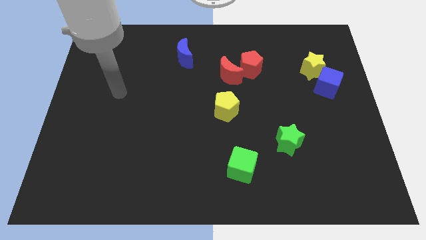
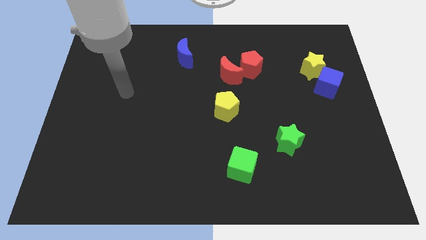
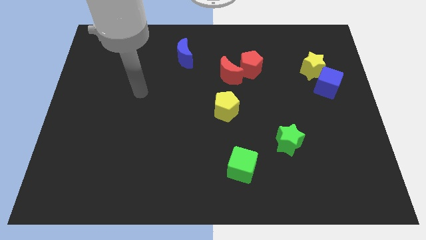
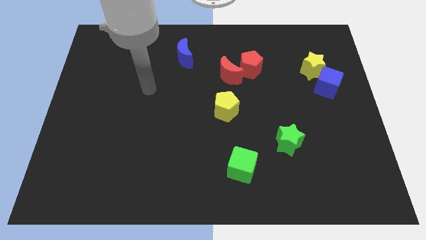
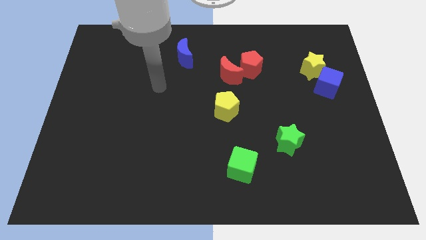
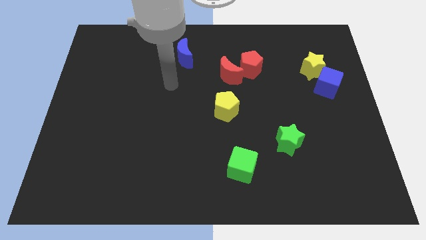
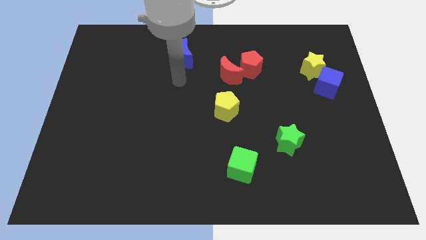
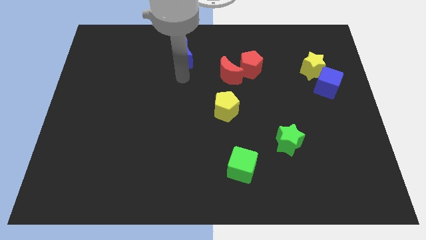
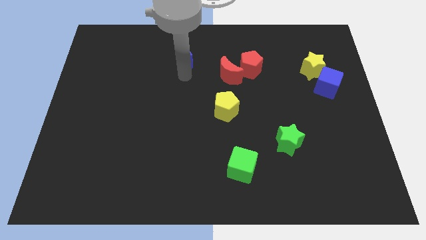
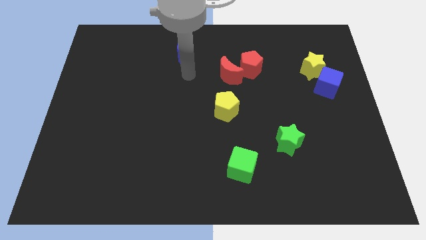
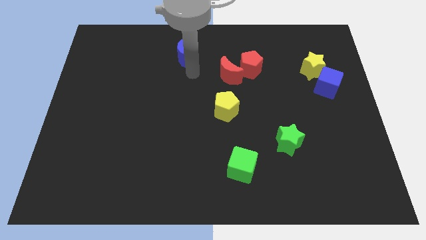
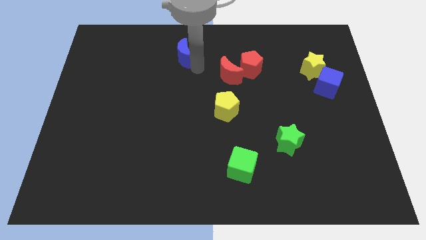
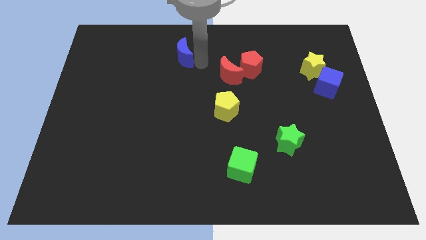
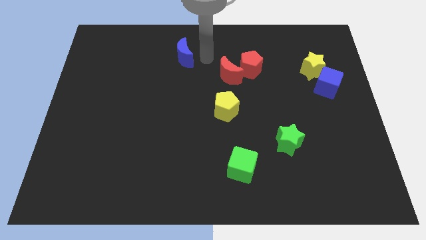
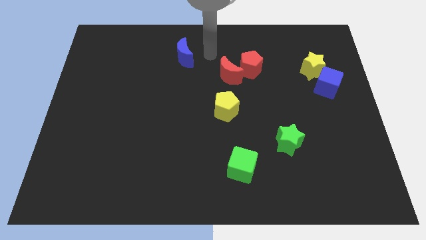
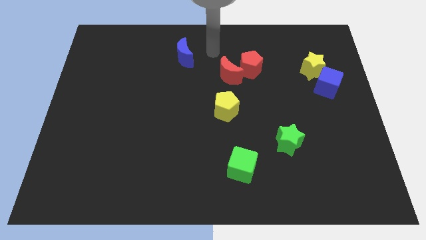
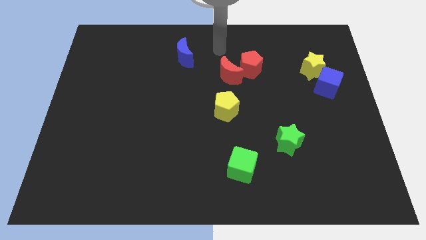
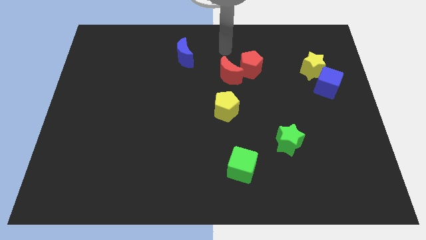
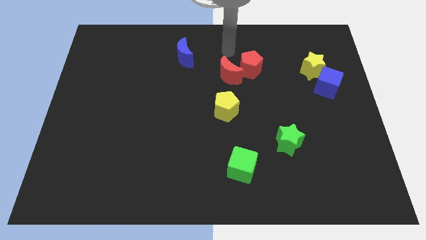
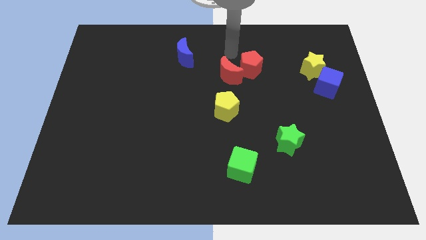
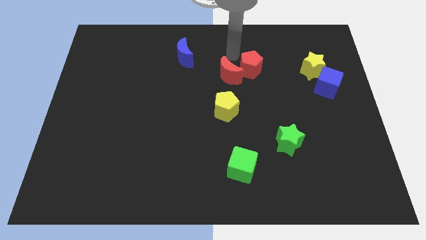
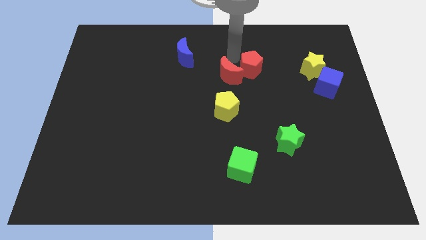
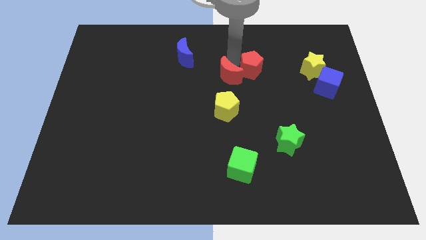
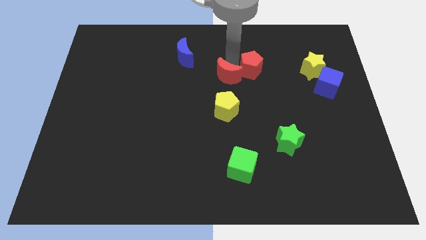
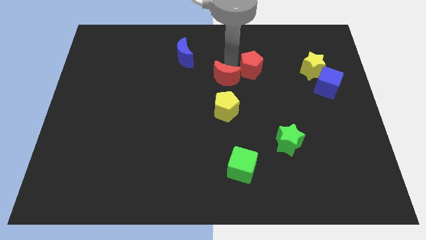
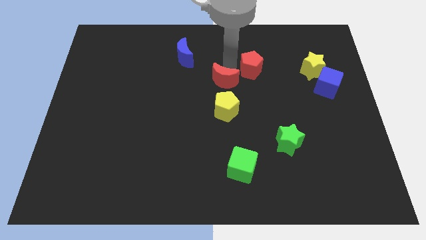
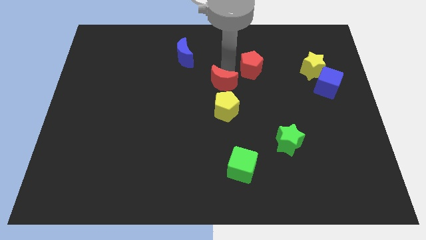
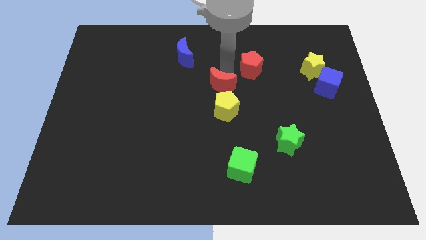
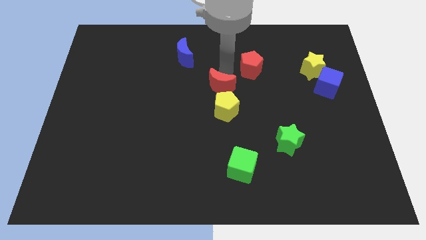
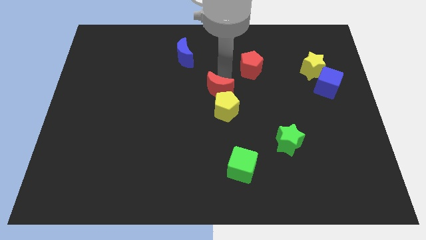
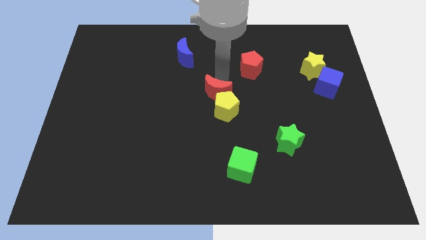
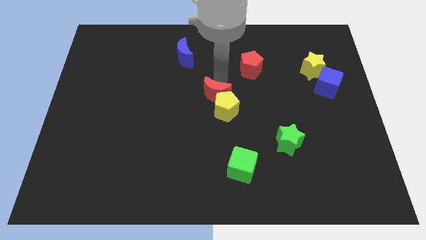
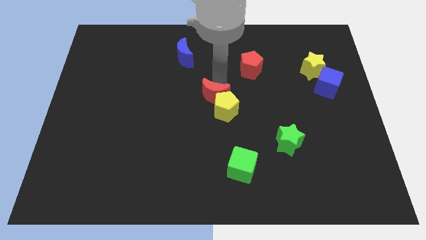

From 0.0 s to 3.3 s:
slide the red moon towards the yellow pentagon

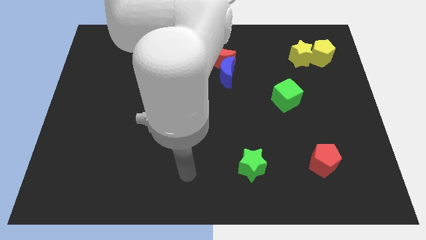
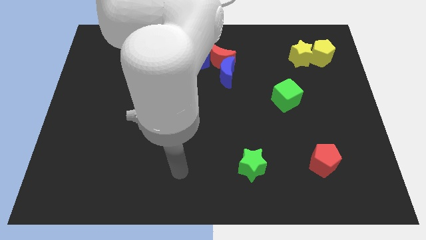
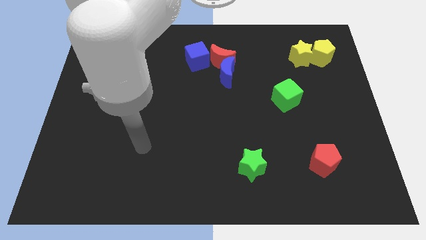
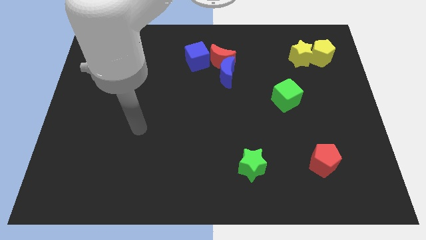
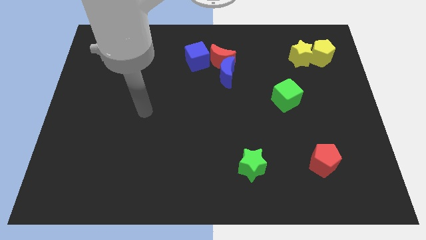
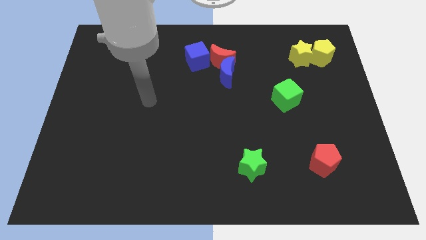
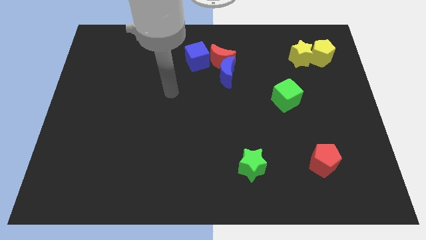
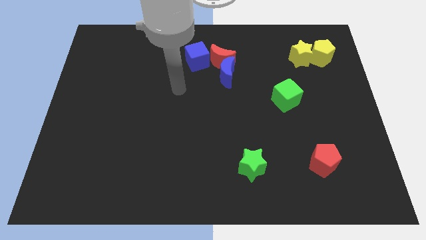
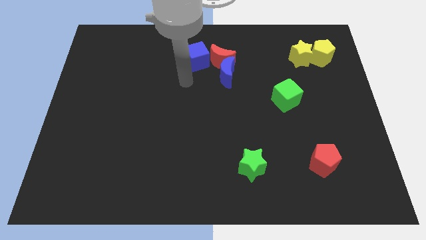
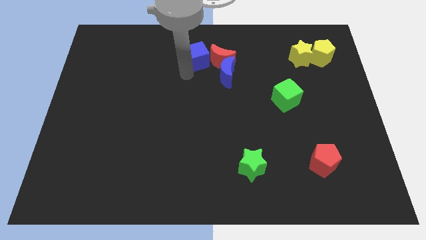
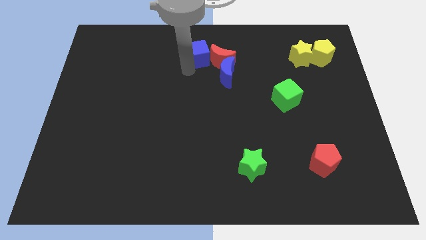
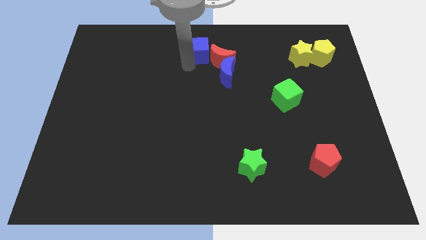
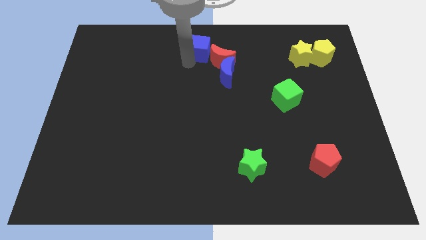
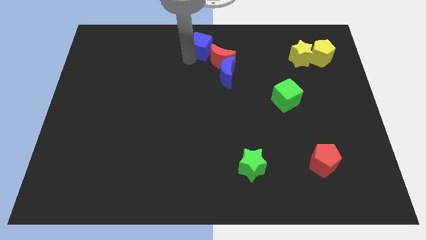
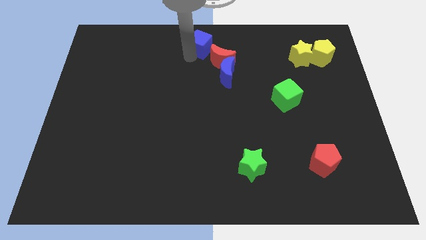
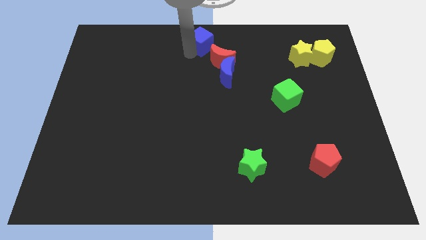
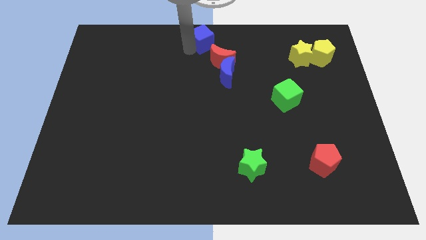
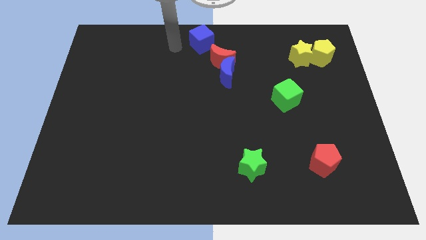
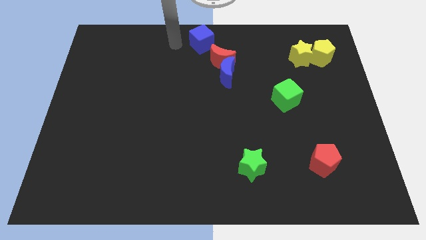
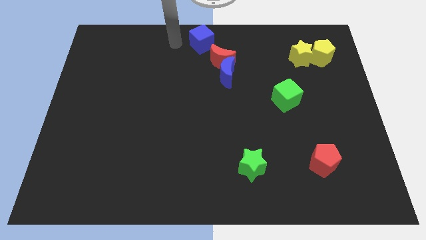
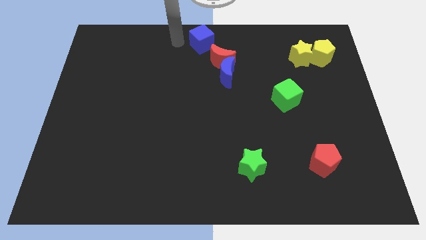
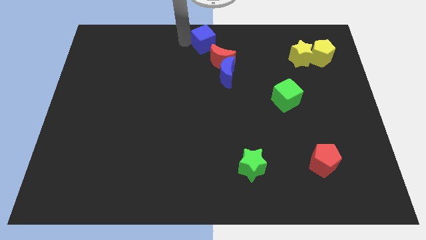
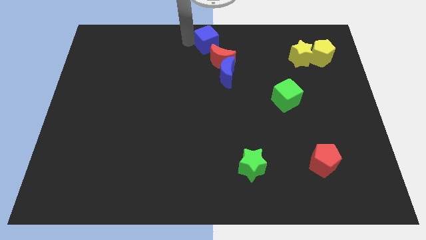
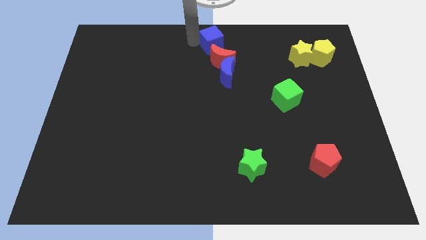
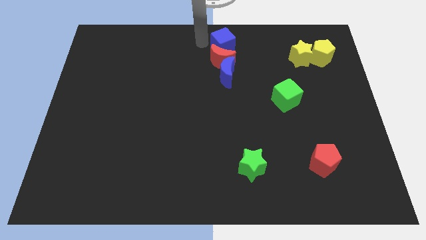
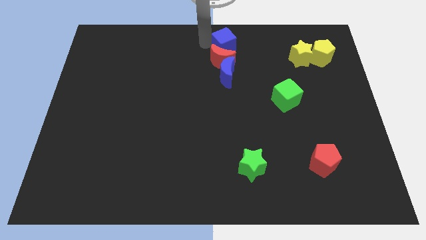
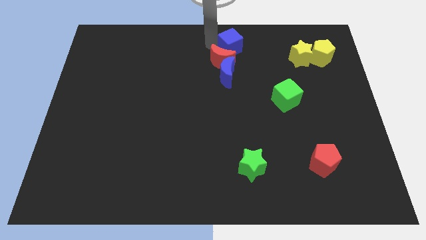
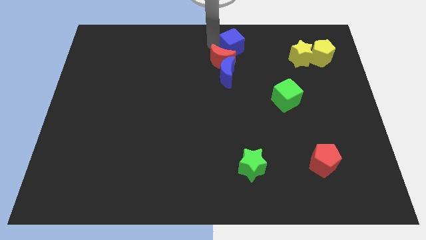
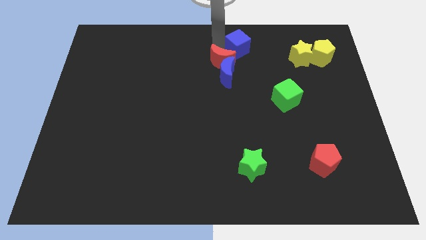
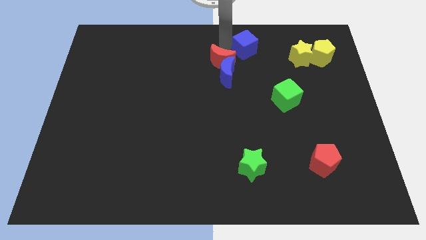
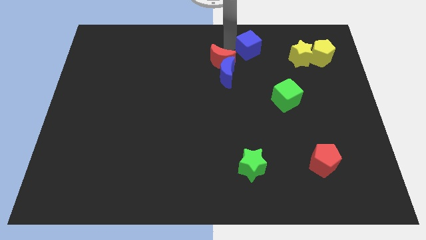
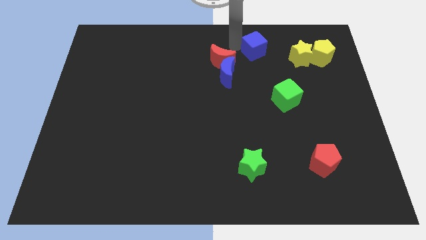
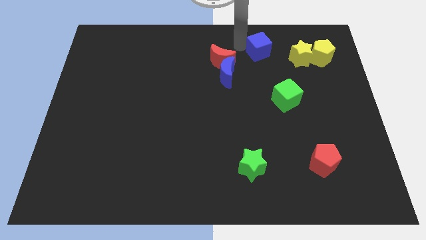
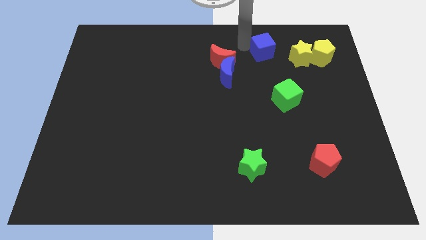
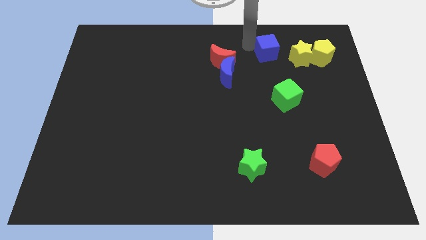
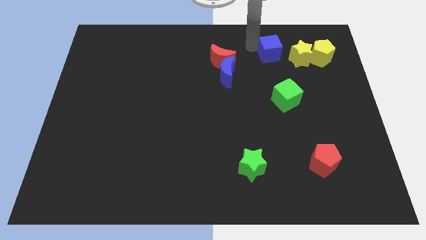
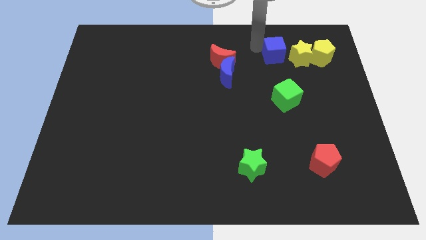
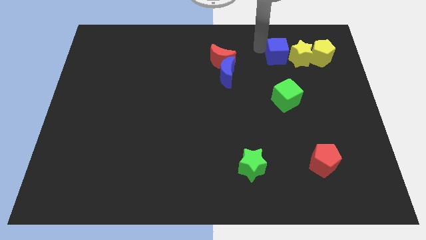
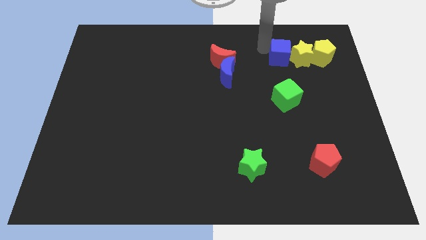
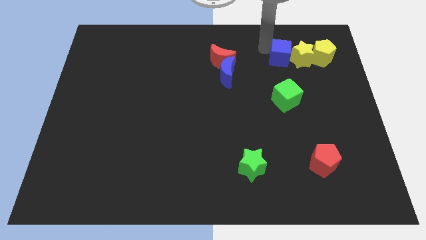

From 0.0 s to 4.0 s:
put the blue cube close to the yellow star

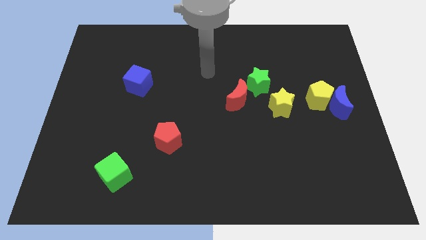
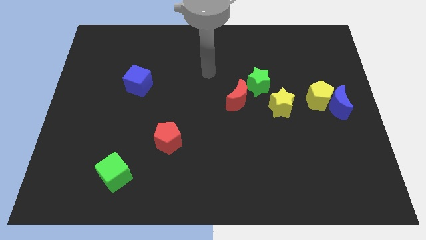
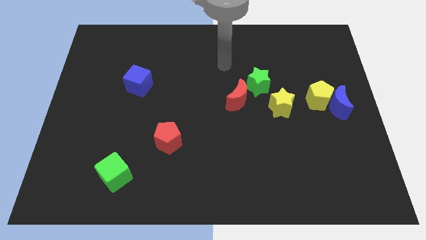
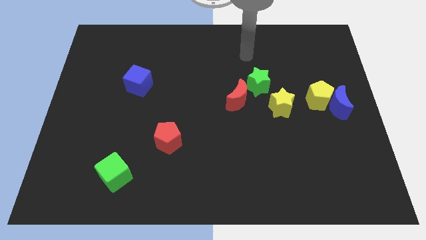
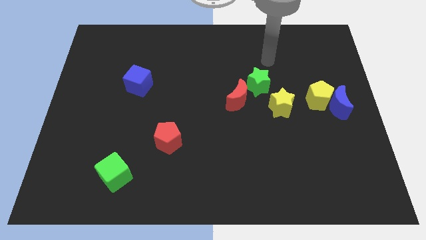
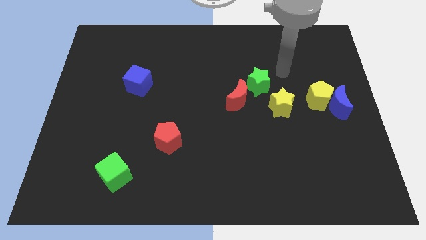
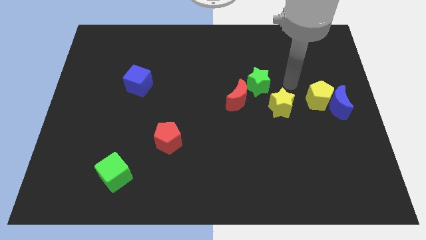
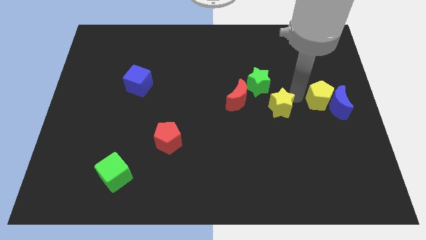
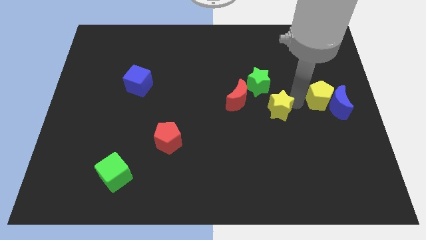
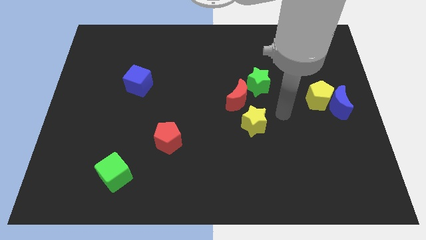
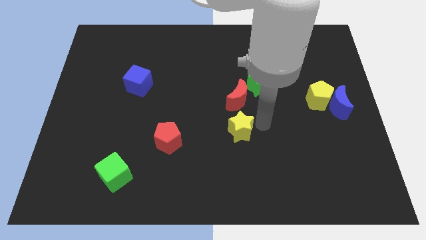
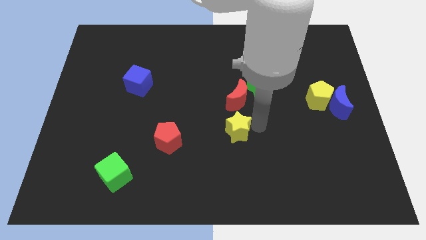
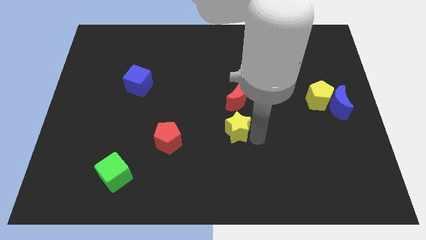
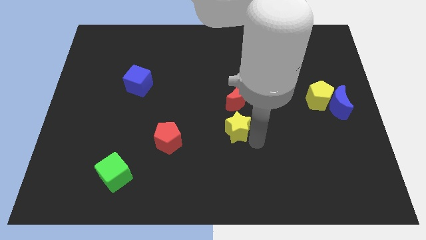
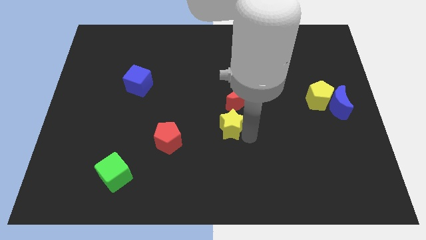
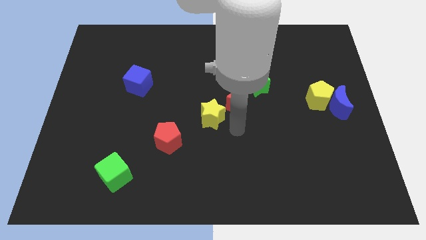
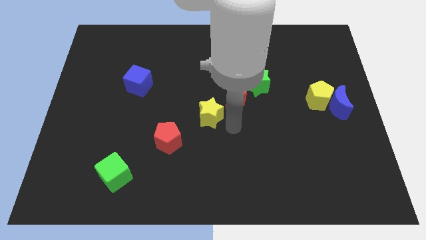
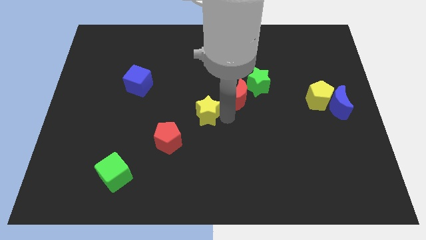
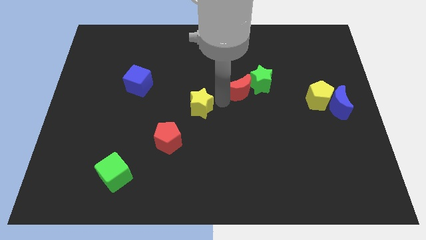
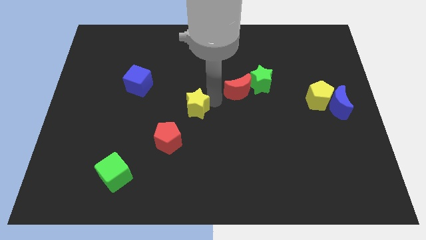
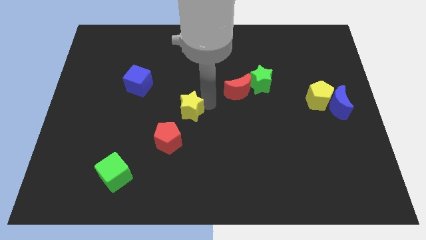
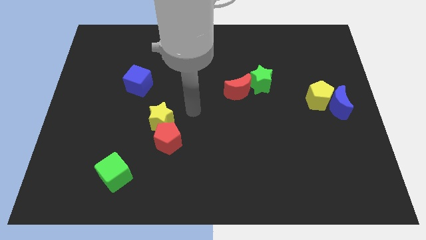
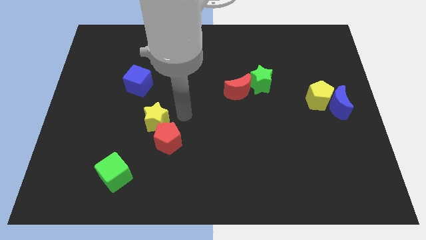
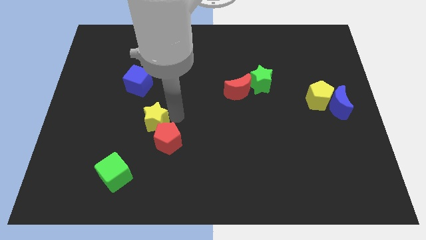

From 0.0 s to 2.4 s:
put the yellow star to the red pentagon
